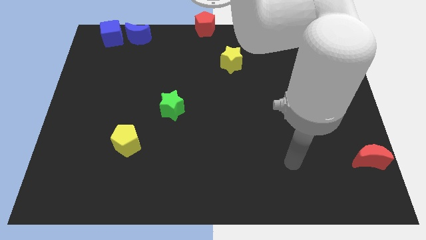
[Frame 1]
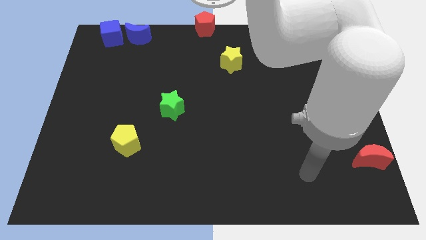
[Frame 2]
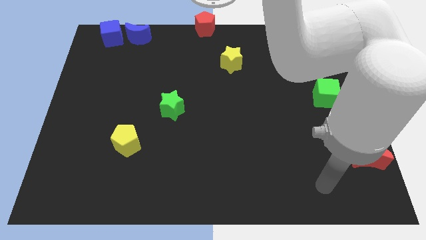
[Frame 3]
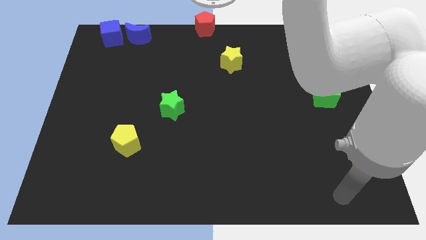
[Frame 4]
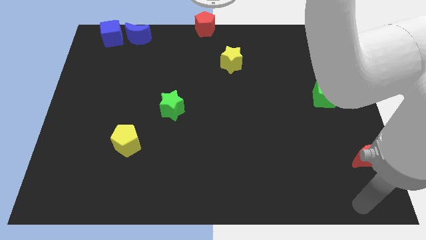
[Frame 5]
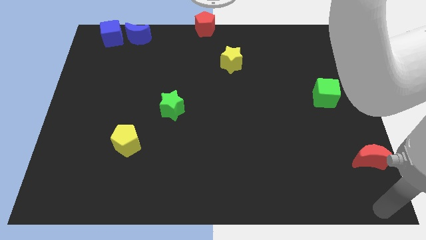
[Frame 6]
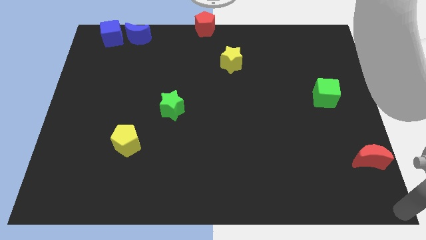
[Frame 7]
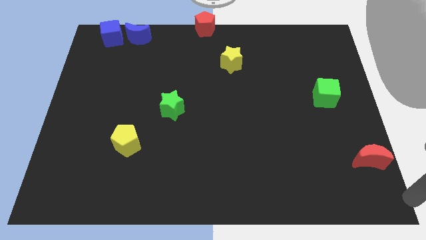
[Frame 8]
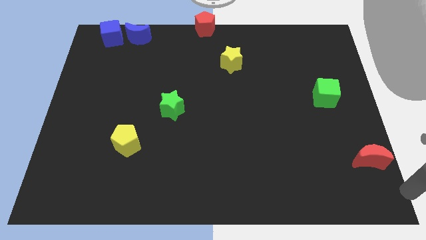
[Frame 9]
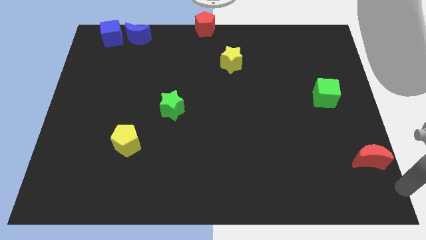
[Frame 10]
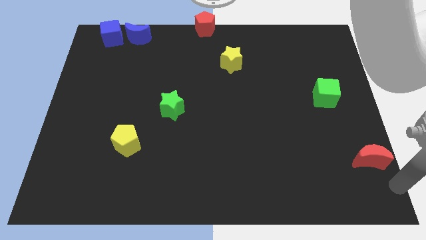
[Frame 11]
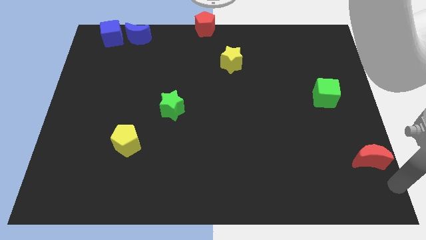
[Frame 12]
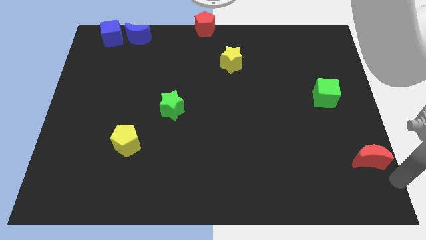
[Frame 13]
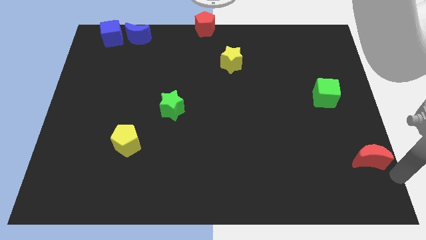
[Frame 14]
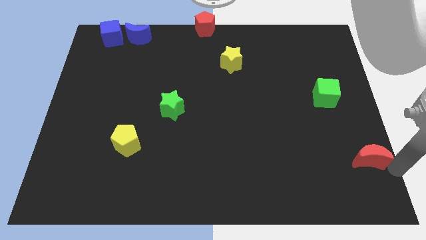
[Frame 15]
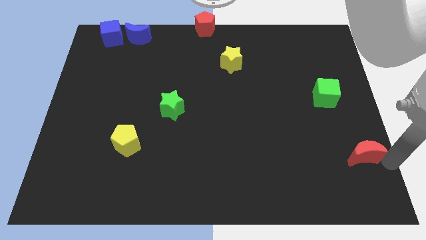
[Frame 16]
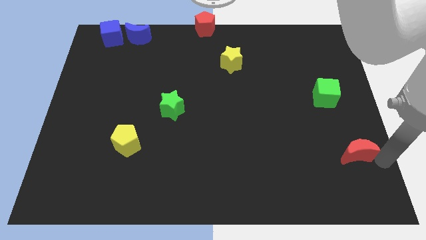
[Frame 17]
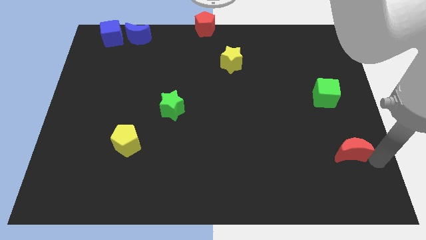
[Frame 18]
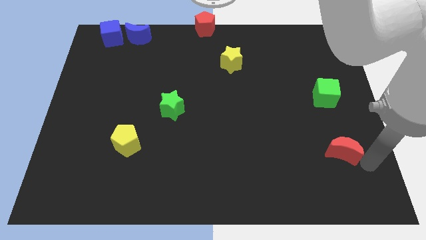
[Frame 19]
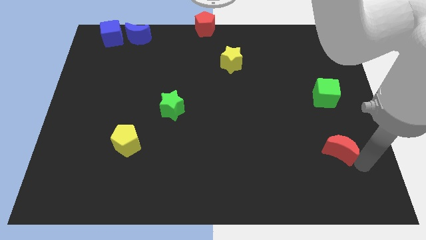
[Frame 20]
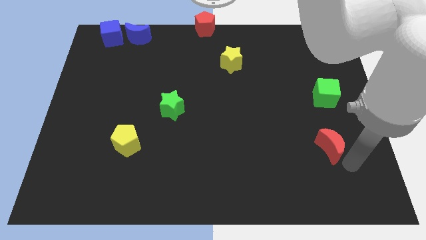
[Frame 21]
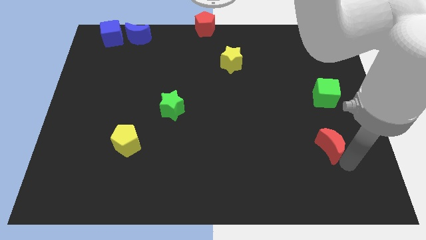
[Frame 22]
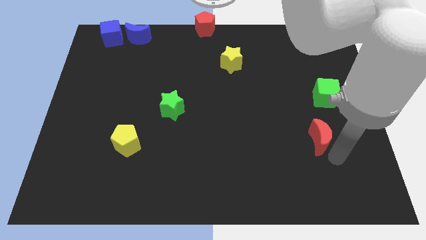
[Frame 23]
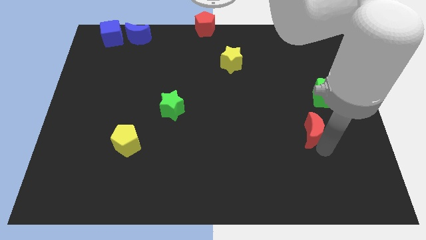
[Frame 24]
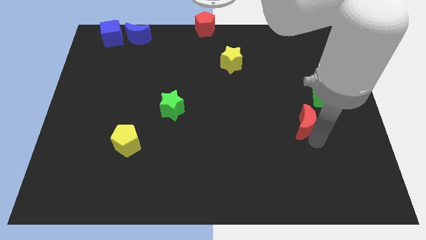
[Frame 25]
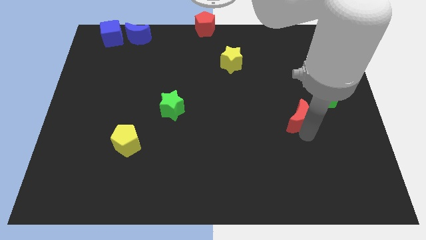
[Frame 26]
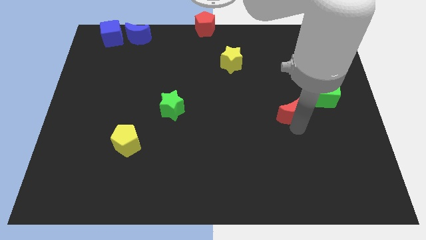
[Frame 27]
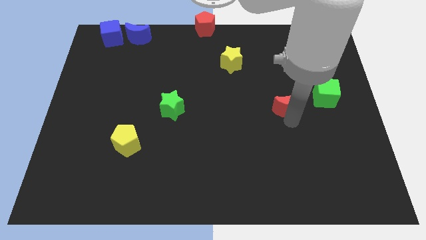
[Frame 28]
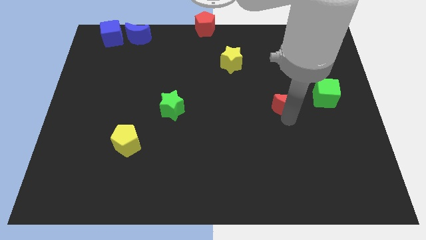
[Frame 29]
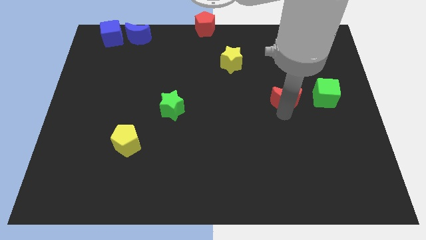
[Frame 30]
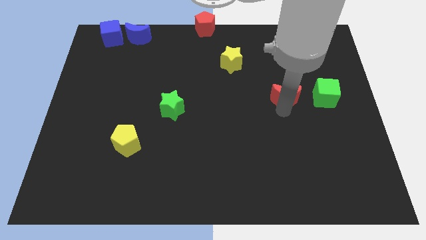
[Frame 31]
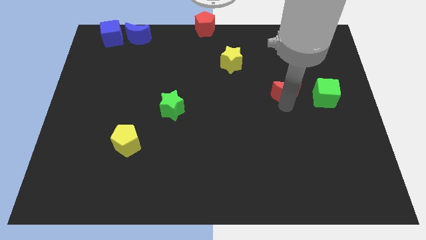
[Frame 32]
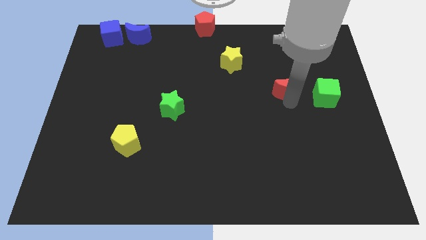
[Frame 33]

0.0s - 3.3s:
place red moon adjacent to green cube

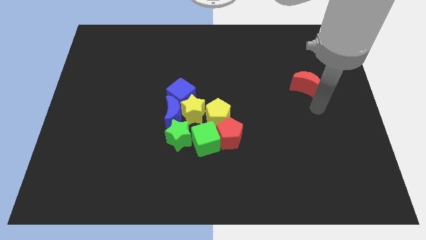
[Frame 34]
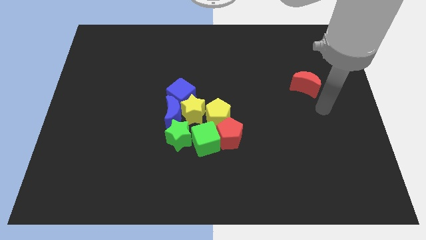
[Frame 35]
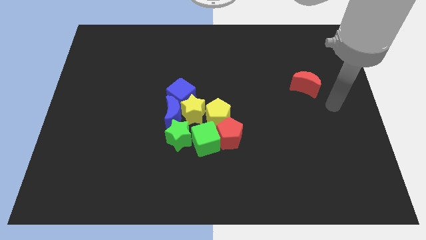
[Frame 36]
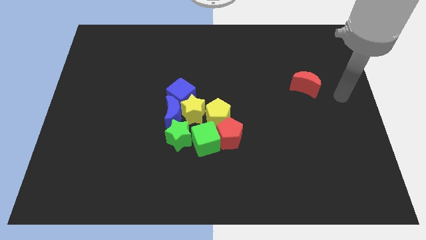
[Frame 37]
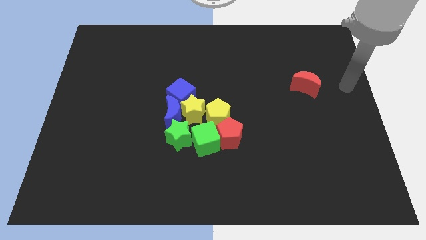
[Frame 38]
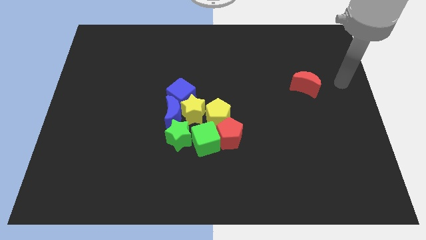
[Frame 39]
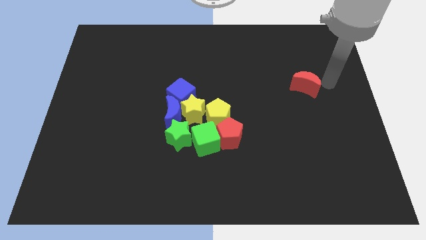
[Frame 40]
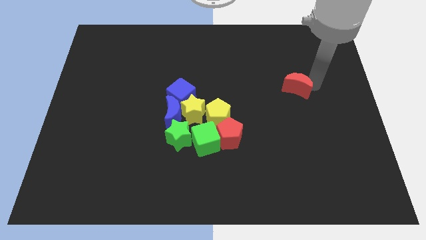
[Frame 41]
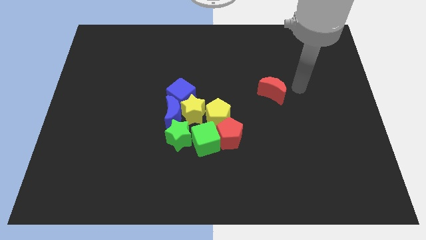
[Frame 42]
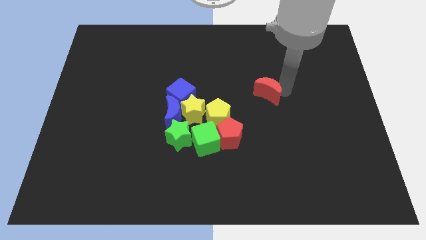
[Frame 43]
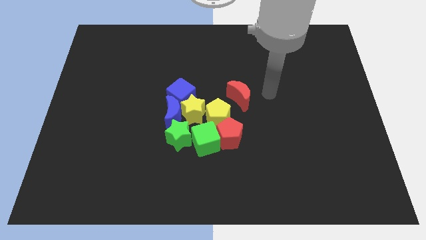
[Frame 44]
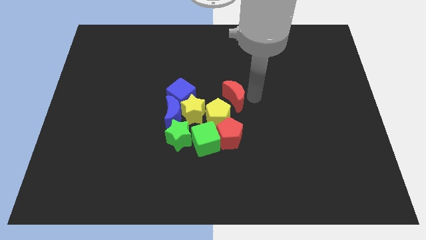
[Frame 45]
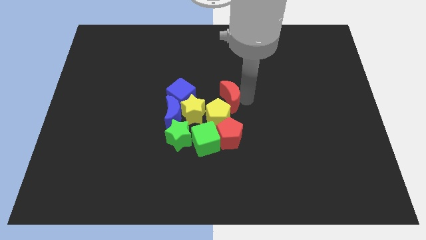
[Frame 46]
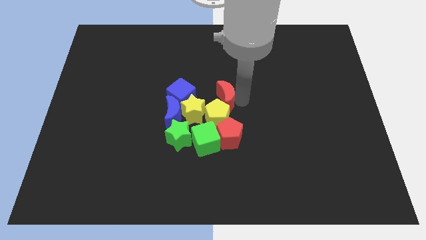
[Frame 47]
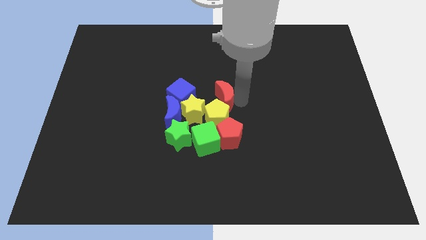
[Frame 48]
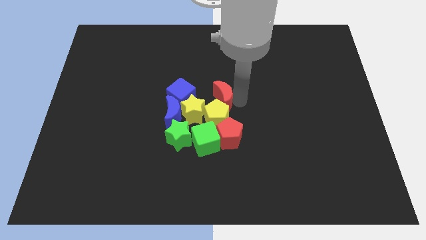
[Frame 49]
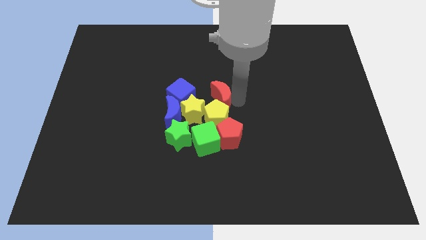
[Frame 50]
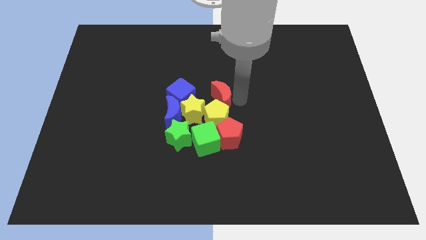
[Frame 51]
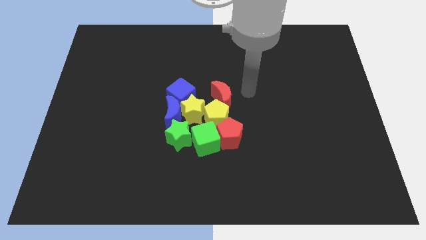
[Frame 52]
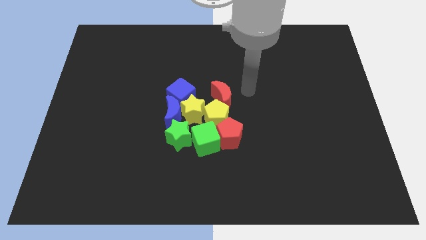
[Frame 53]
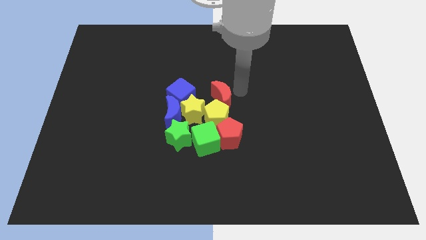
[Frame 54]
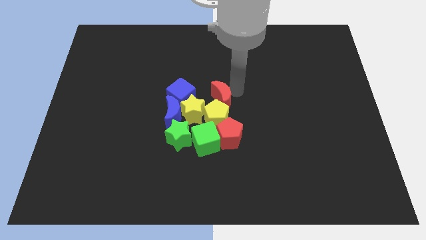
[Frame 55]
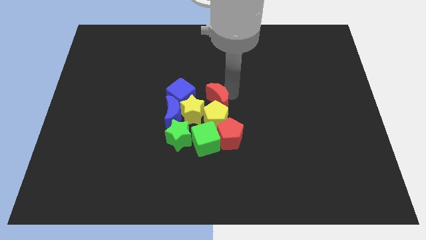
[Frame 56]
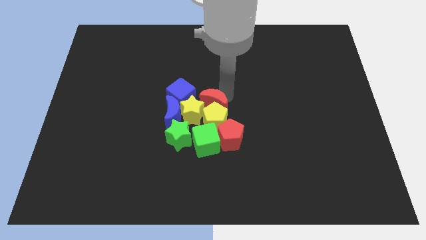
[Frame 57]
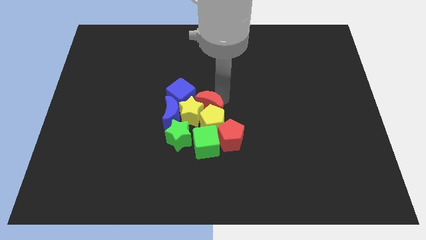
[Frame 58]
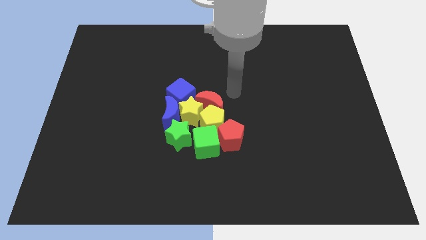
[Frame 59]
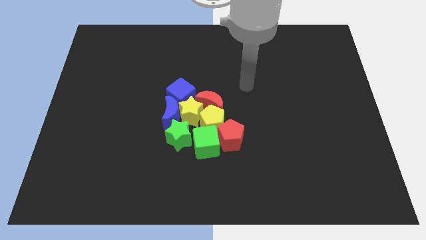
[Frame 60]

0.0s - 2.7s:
place red crescent near yellow blocks

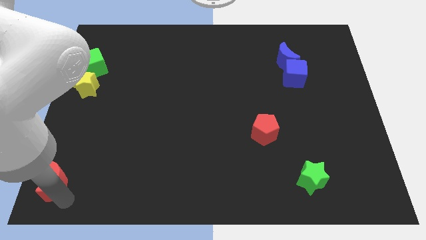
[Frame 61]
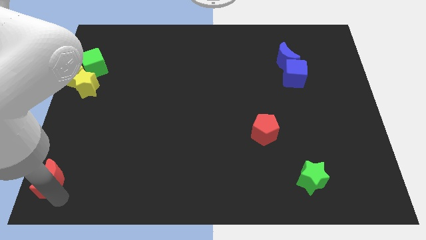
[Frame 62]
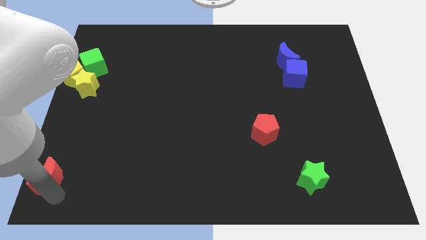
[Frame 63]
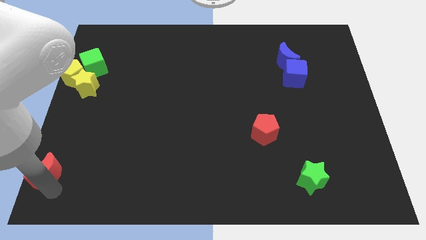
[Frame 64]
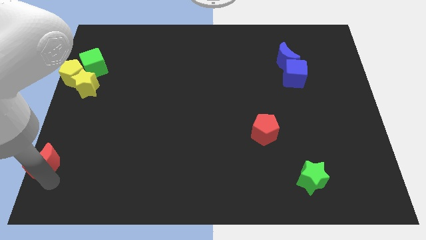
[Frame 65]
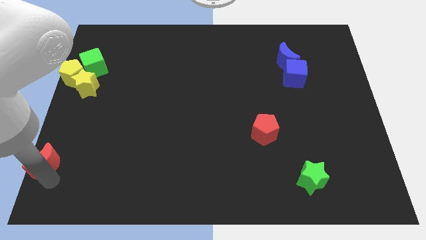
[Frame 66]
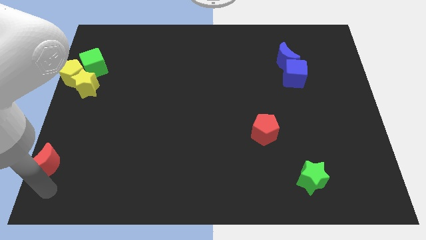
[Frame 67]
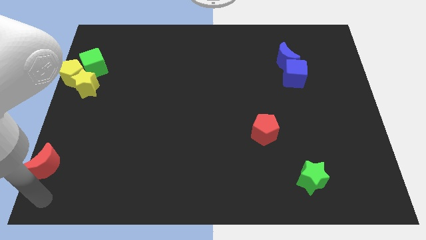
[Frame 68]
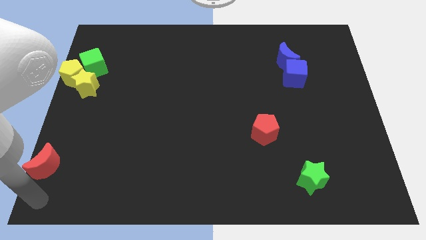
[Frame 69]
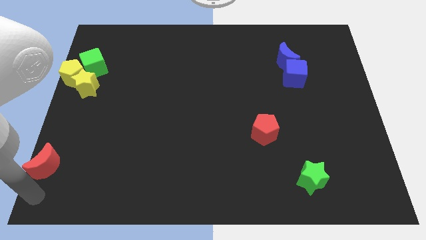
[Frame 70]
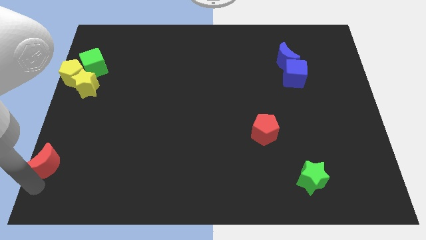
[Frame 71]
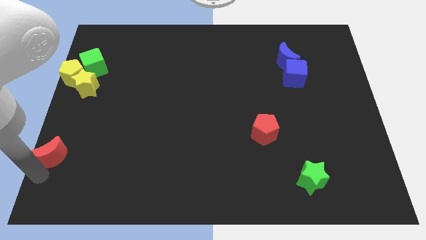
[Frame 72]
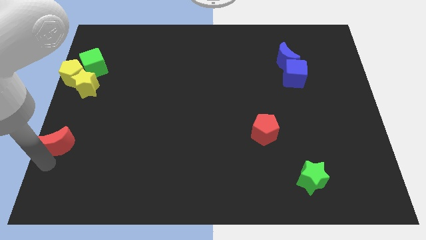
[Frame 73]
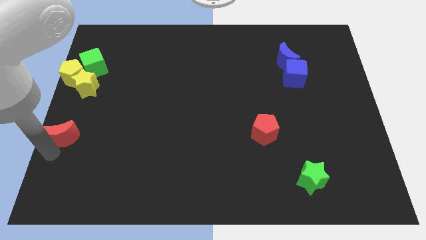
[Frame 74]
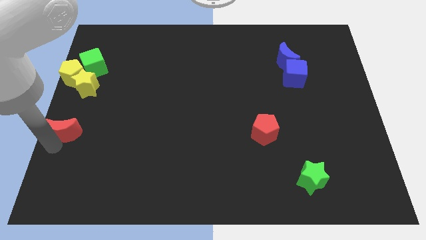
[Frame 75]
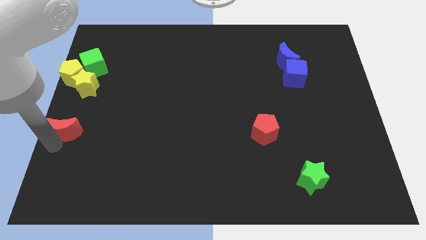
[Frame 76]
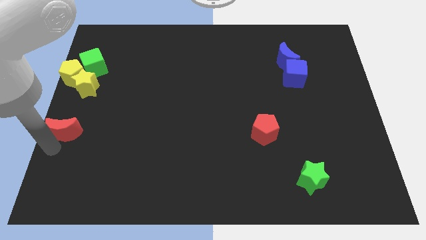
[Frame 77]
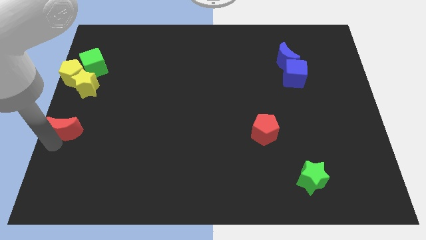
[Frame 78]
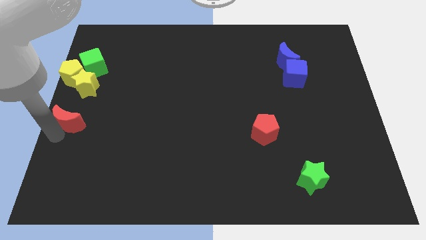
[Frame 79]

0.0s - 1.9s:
drag the red moon slightly upwards

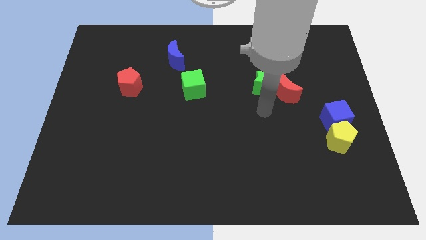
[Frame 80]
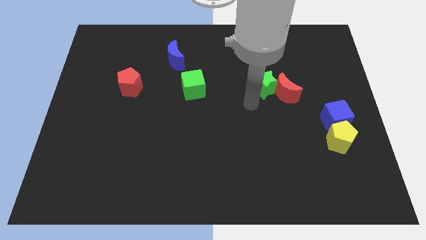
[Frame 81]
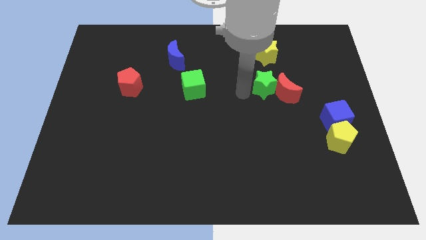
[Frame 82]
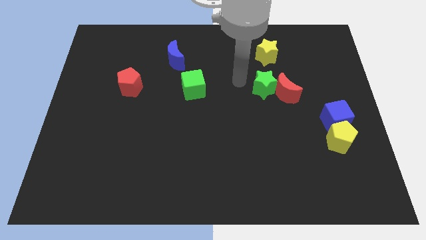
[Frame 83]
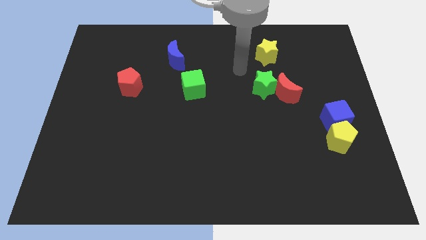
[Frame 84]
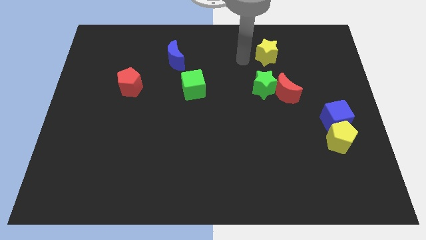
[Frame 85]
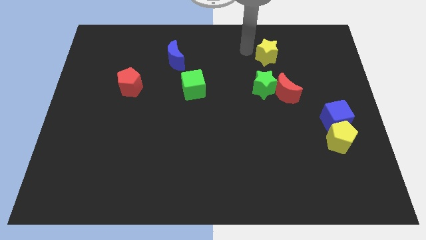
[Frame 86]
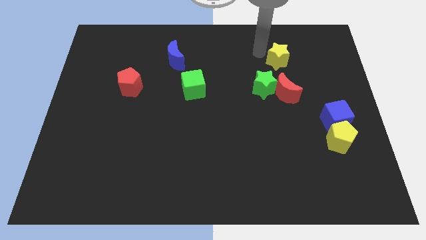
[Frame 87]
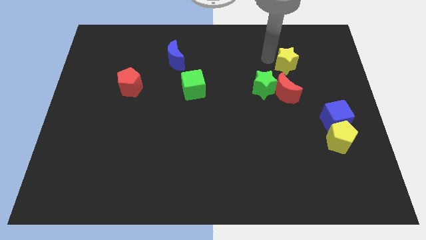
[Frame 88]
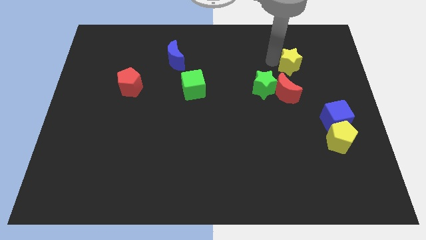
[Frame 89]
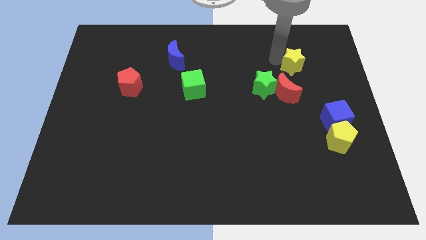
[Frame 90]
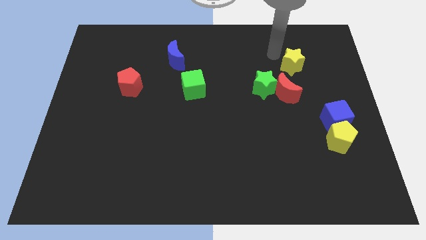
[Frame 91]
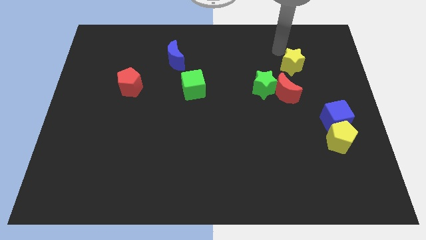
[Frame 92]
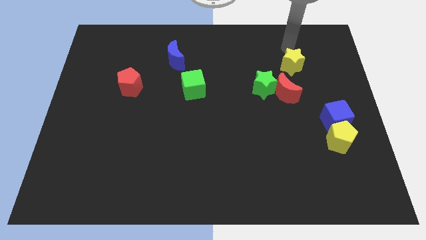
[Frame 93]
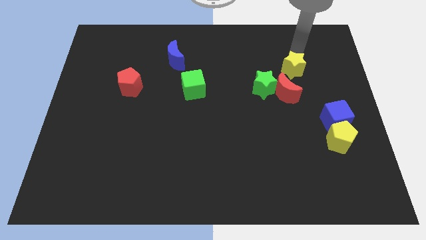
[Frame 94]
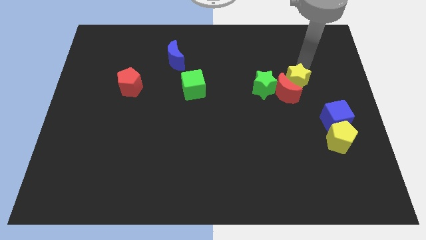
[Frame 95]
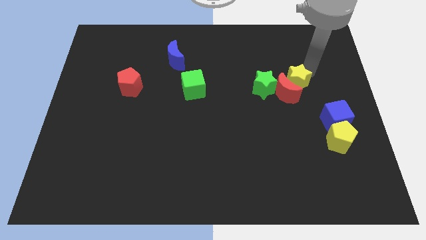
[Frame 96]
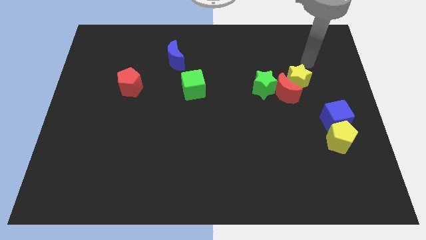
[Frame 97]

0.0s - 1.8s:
place the yellow star close to red moon
